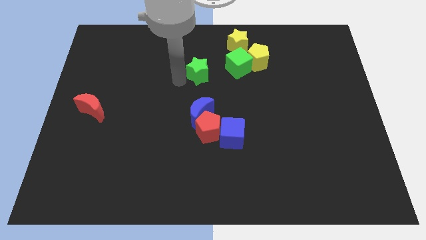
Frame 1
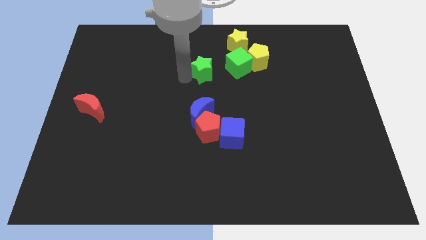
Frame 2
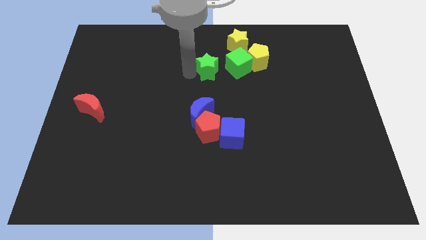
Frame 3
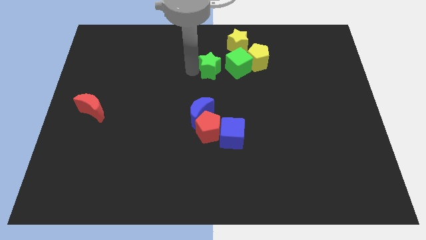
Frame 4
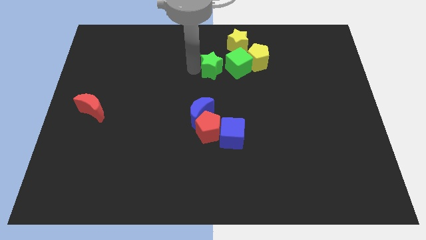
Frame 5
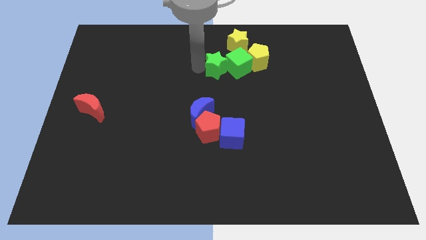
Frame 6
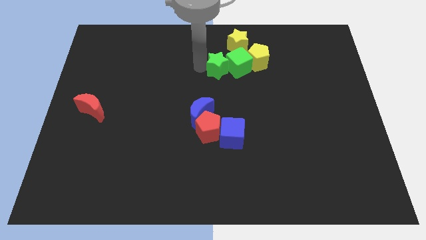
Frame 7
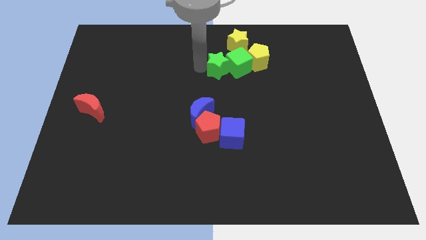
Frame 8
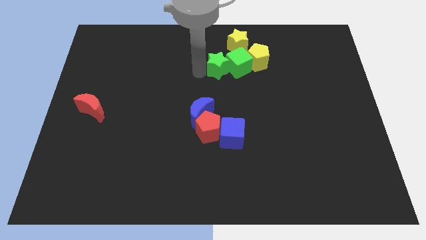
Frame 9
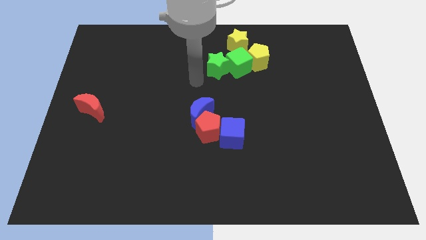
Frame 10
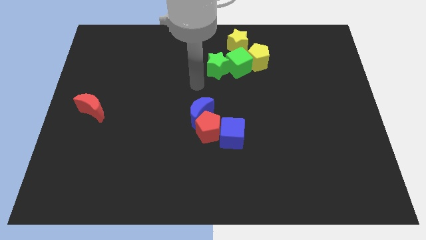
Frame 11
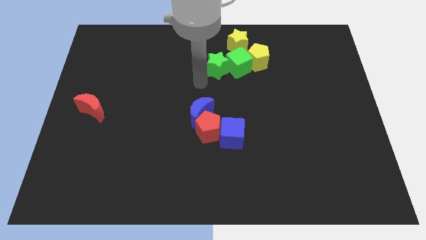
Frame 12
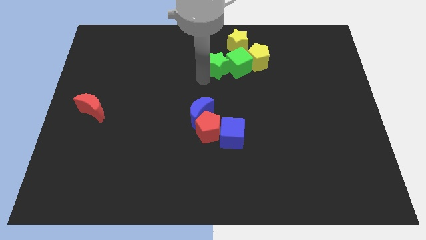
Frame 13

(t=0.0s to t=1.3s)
move the green star on the left side of the green cube

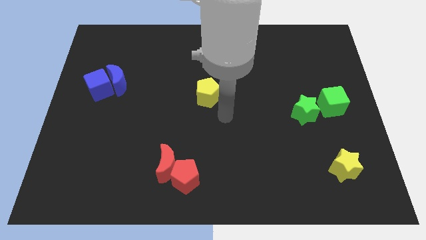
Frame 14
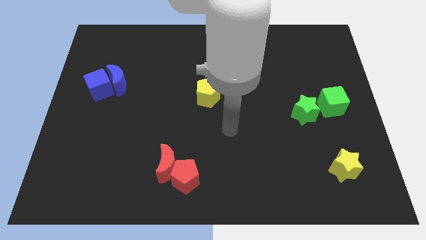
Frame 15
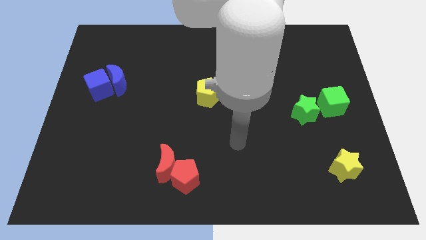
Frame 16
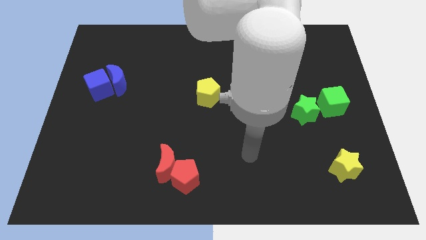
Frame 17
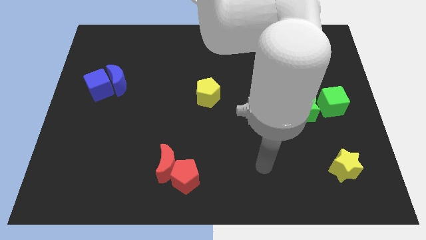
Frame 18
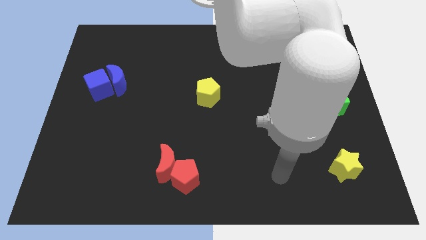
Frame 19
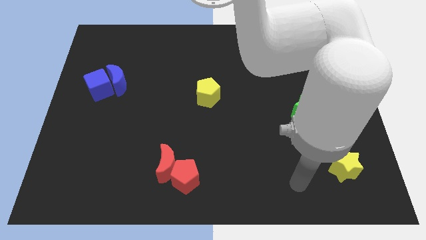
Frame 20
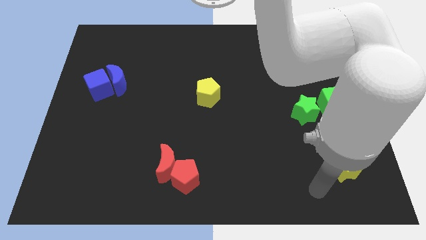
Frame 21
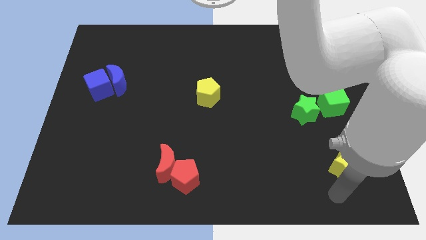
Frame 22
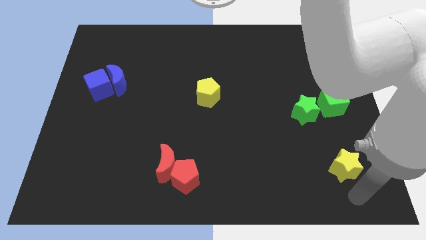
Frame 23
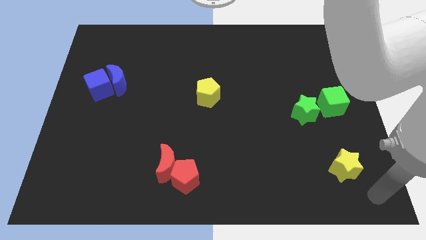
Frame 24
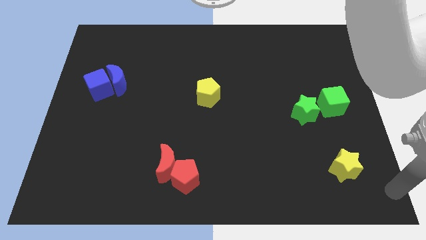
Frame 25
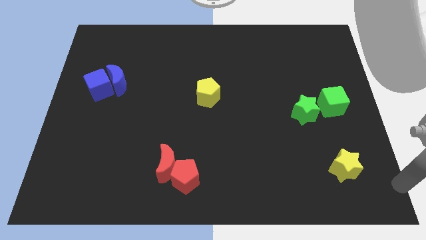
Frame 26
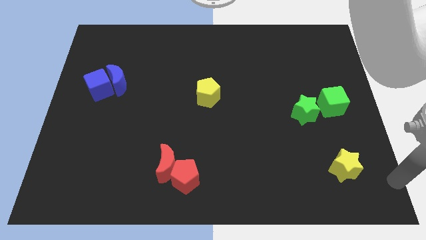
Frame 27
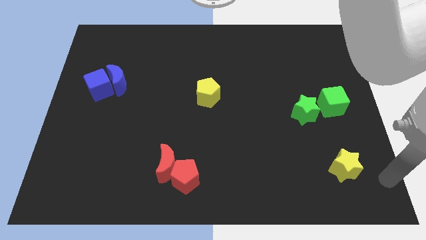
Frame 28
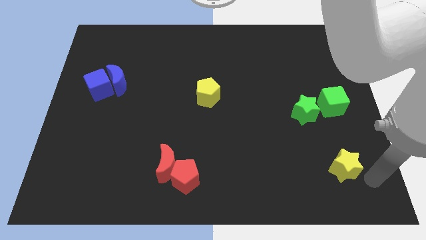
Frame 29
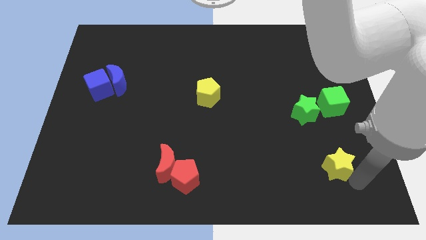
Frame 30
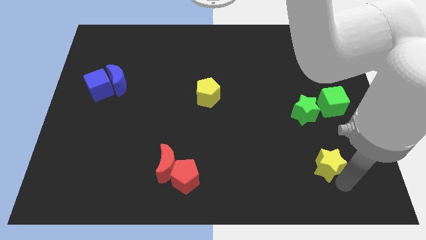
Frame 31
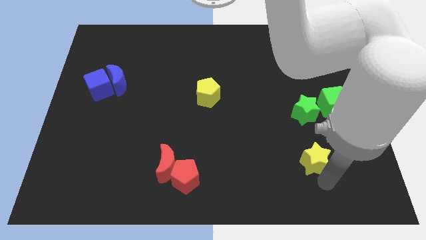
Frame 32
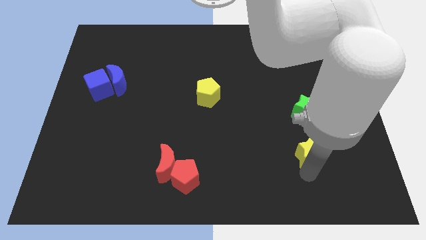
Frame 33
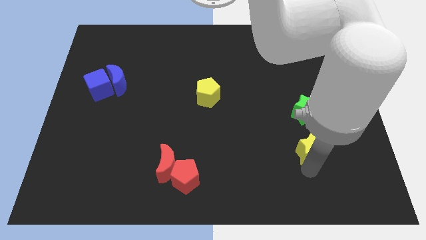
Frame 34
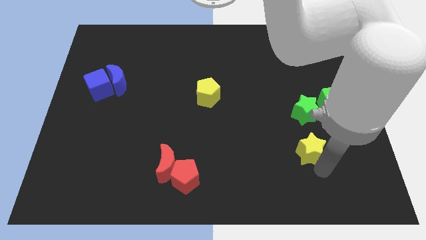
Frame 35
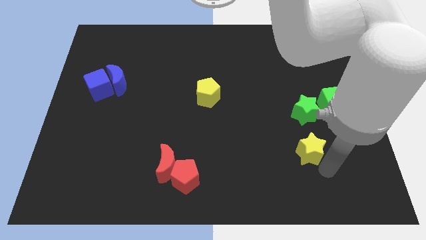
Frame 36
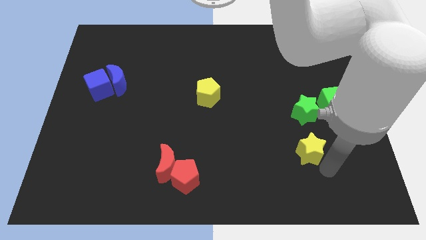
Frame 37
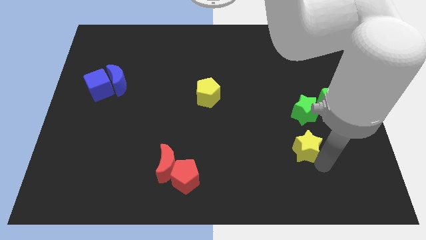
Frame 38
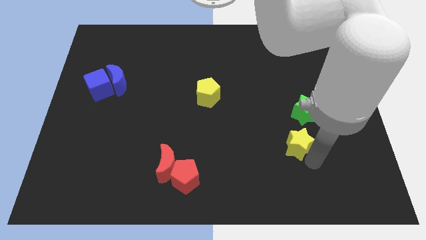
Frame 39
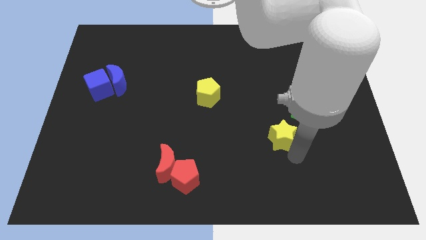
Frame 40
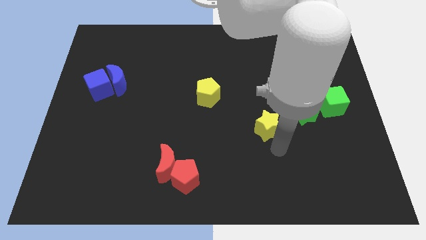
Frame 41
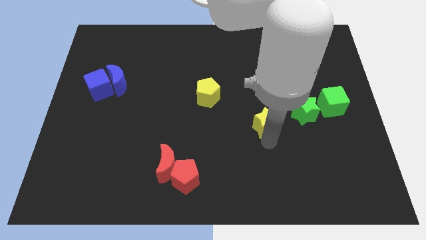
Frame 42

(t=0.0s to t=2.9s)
push the yellow star towards the yellow pentagon

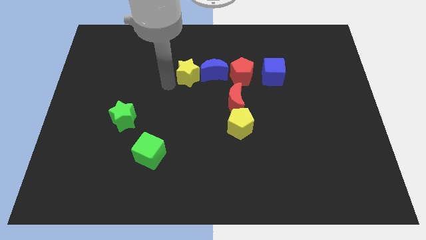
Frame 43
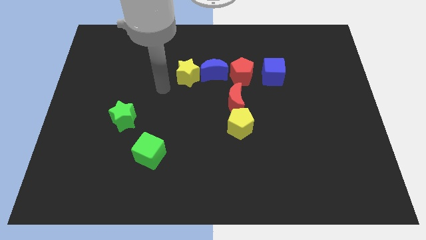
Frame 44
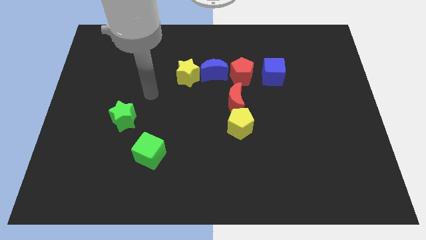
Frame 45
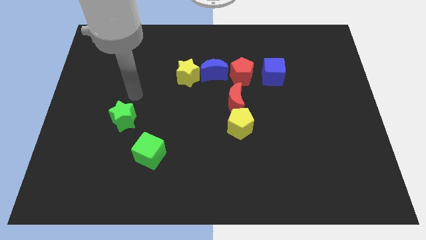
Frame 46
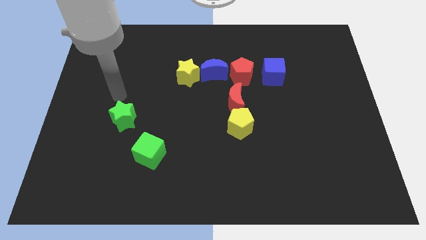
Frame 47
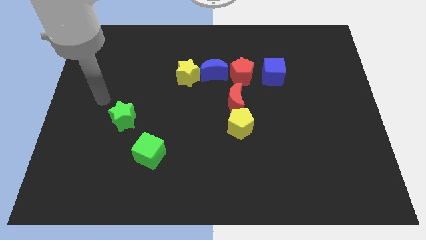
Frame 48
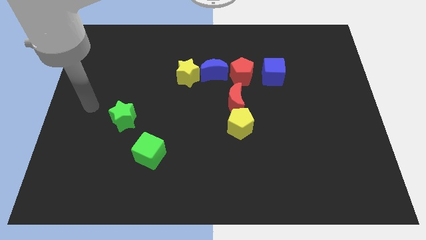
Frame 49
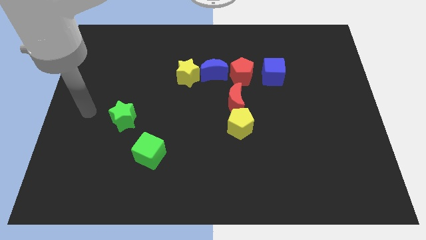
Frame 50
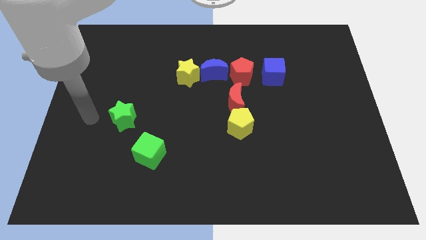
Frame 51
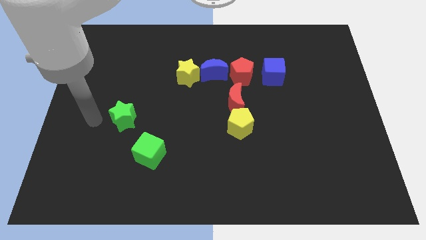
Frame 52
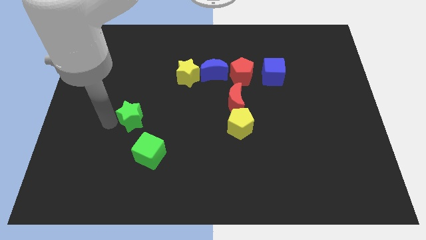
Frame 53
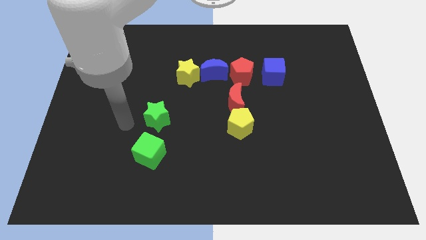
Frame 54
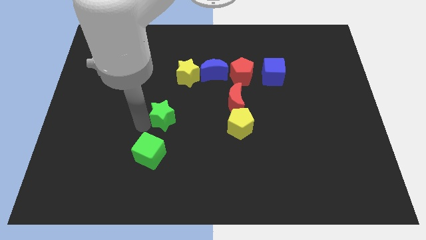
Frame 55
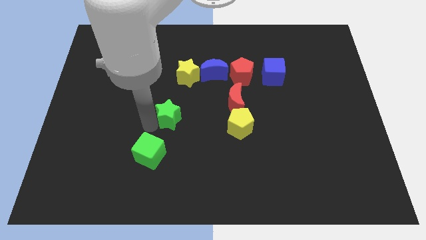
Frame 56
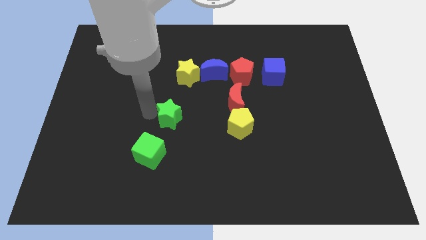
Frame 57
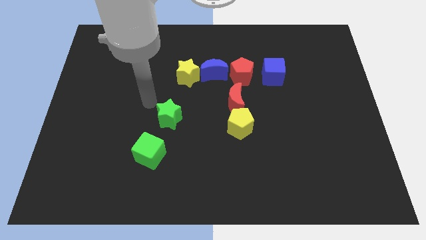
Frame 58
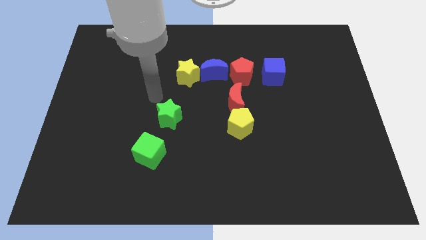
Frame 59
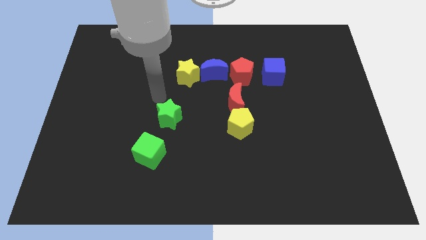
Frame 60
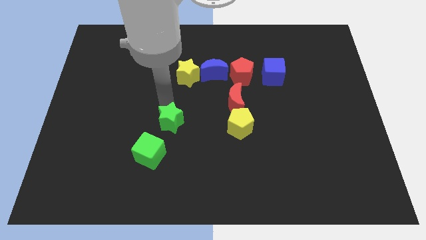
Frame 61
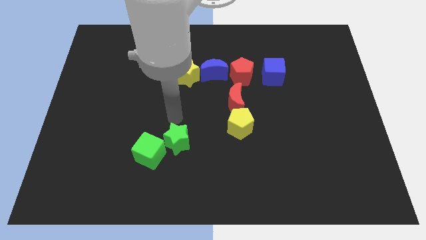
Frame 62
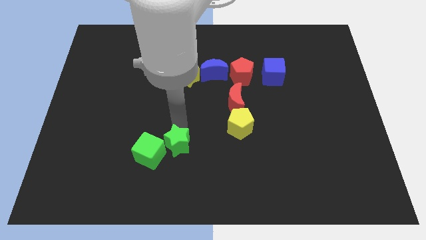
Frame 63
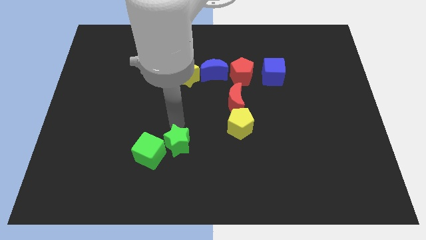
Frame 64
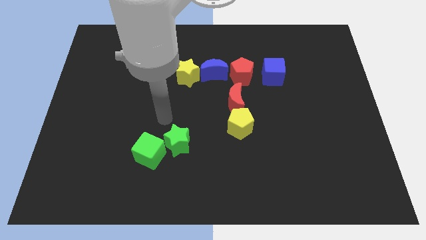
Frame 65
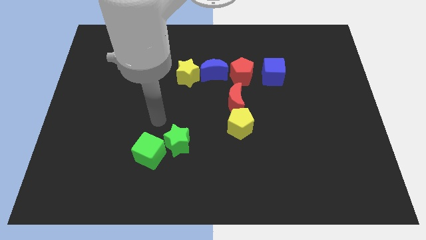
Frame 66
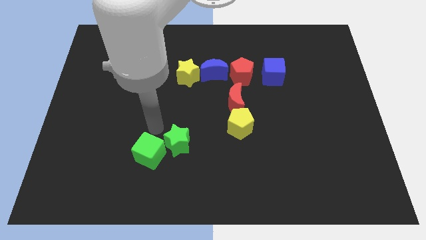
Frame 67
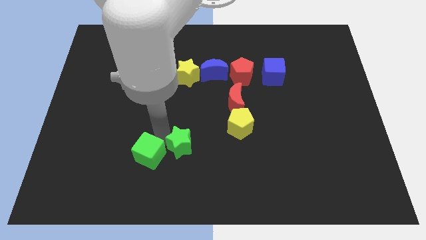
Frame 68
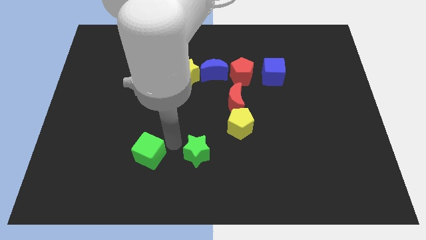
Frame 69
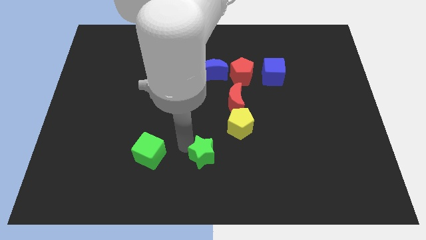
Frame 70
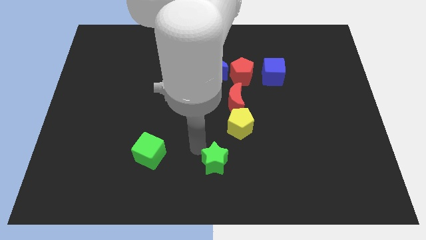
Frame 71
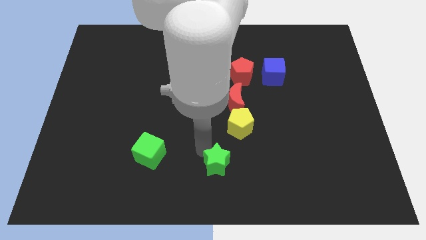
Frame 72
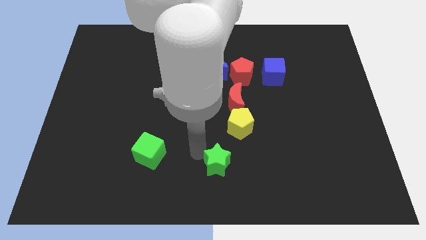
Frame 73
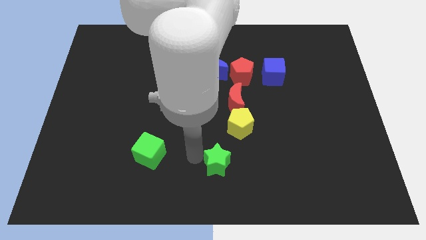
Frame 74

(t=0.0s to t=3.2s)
move the green star to the right of the green cube

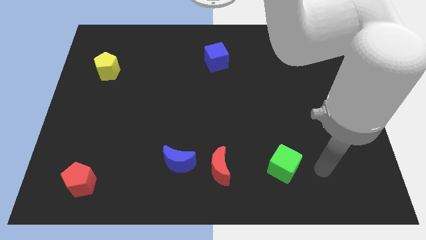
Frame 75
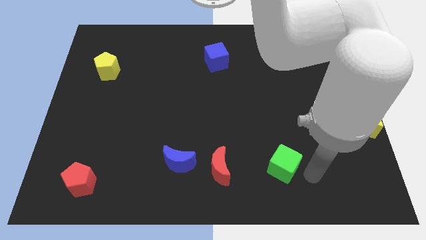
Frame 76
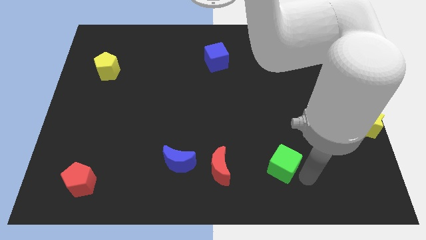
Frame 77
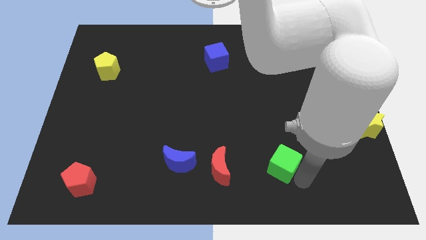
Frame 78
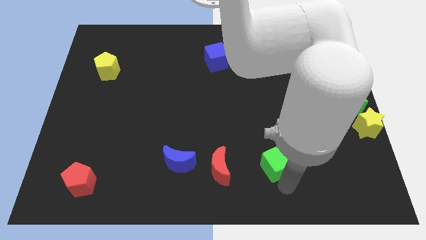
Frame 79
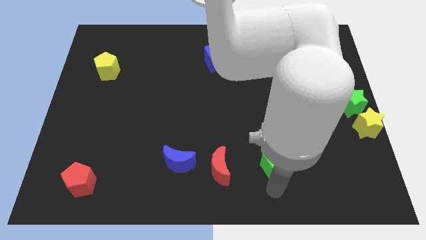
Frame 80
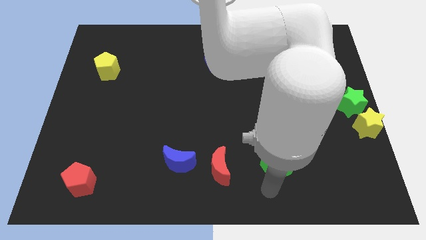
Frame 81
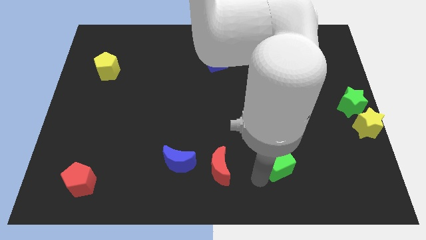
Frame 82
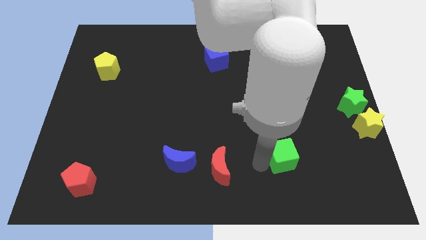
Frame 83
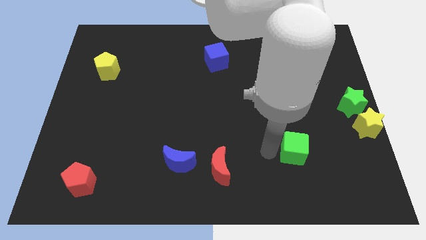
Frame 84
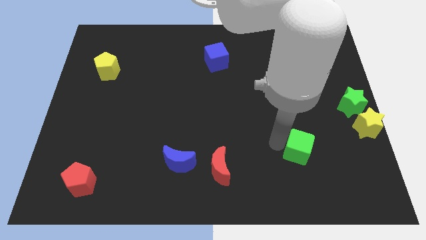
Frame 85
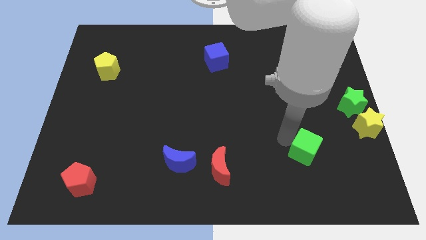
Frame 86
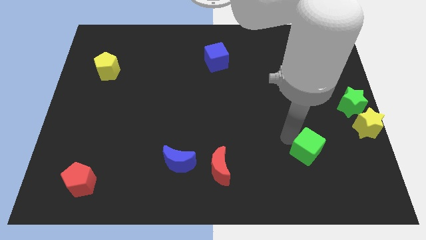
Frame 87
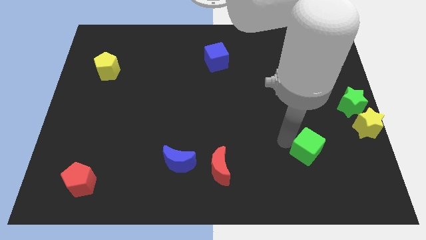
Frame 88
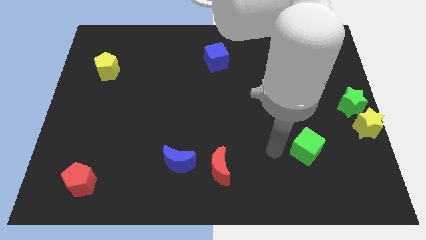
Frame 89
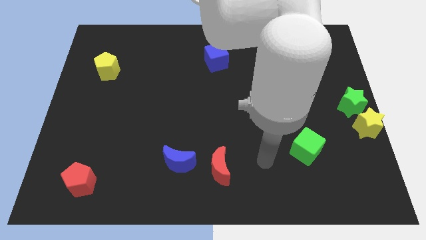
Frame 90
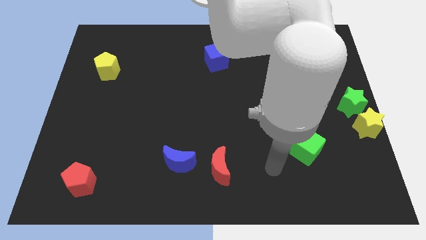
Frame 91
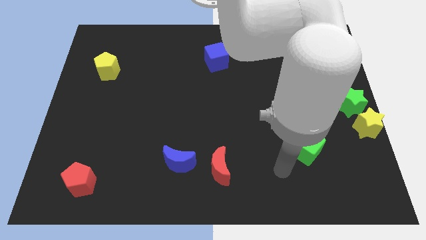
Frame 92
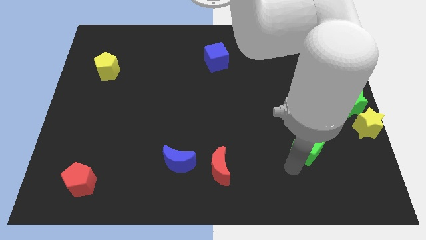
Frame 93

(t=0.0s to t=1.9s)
push the green cube towards the green star
